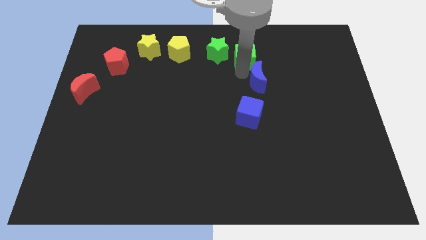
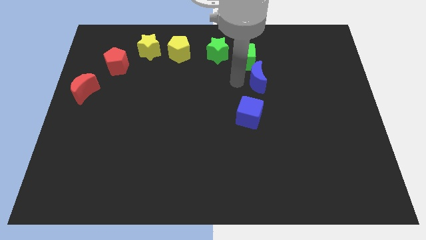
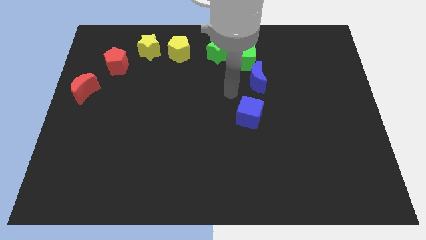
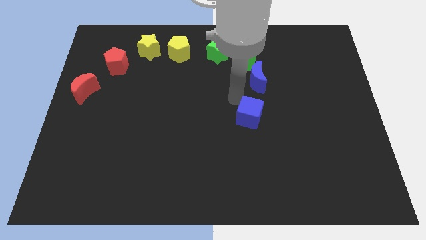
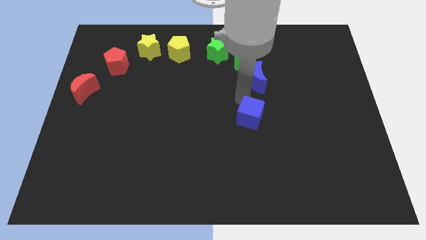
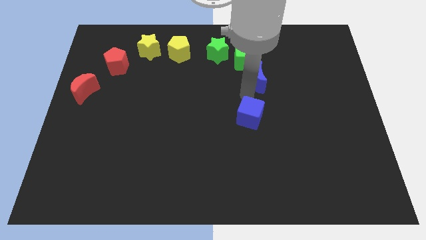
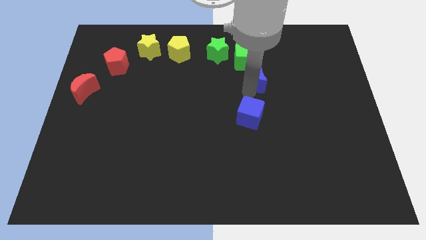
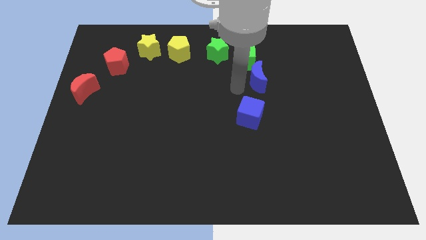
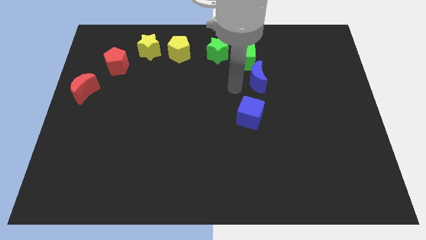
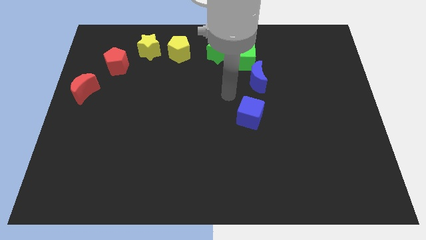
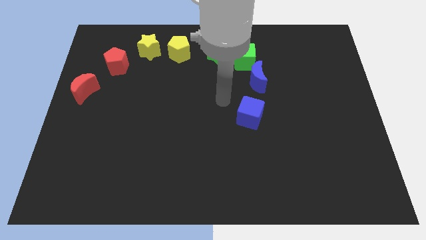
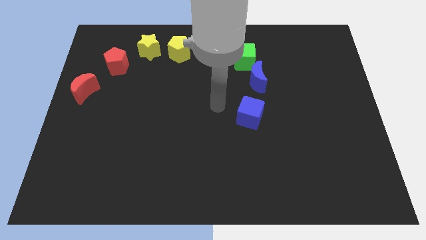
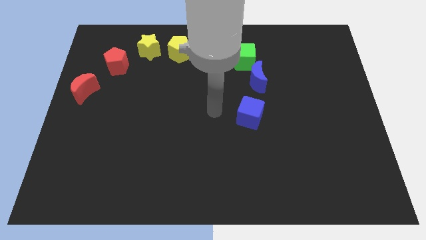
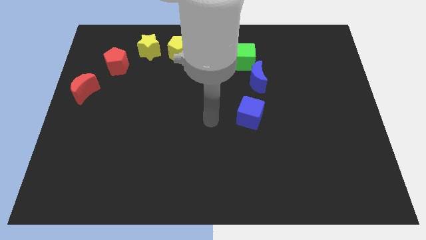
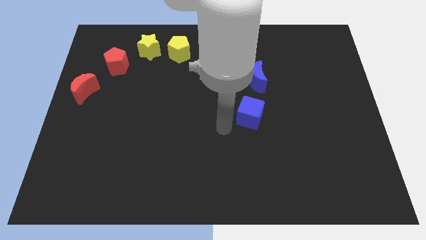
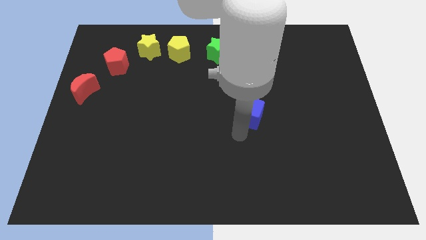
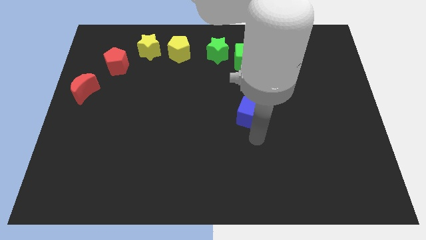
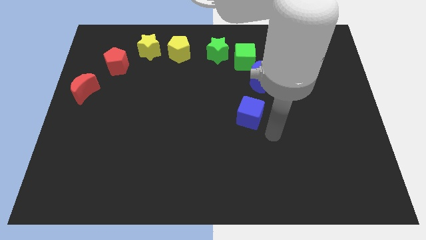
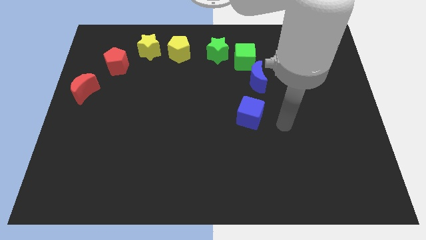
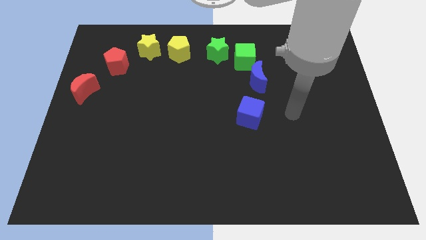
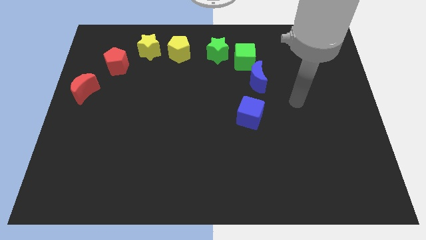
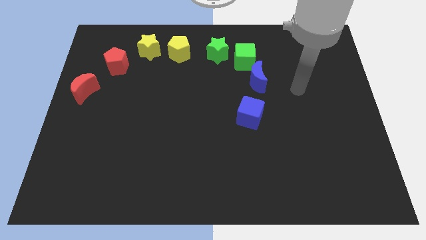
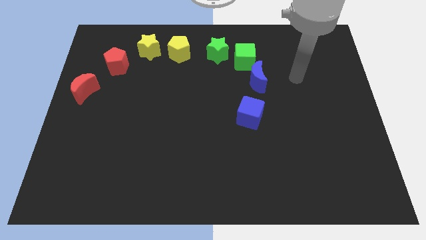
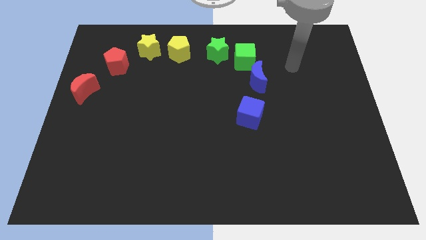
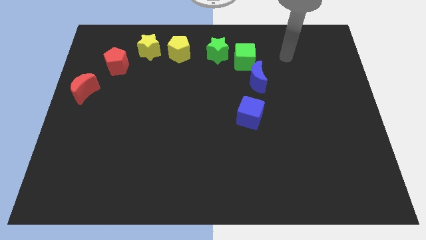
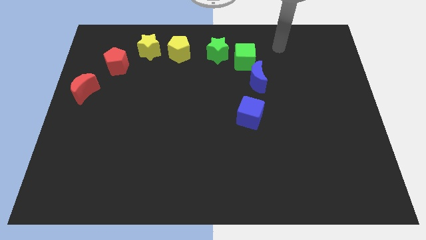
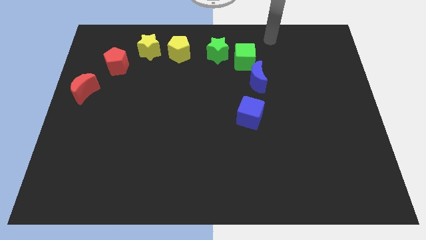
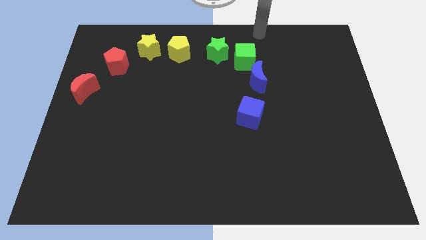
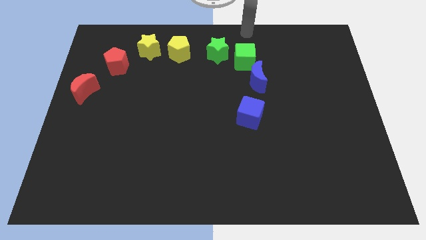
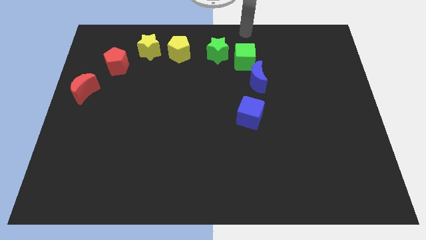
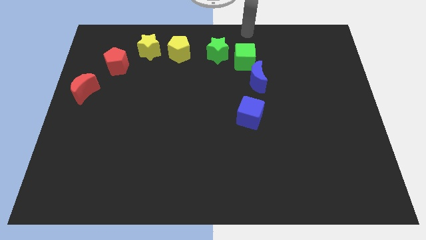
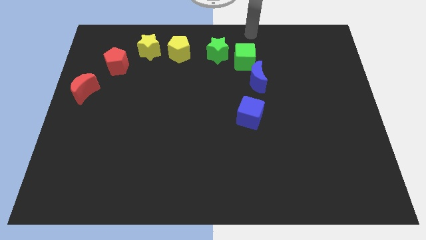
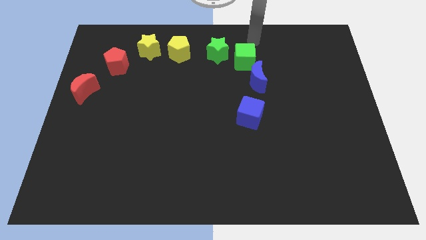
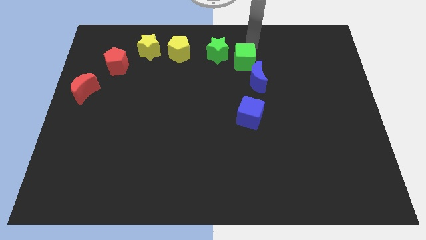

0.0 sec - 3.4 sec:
place your arm on the top side of the green cube

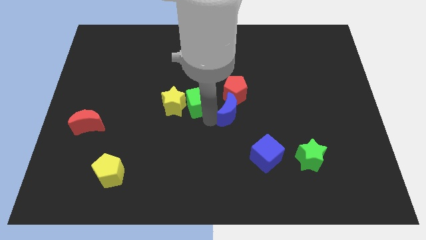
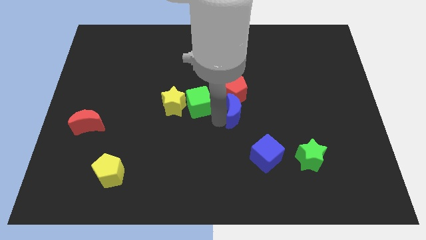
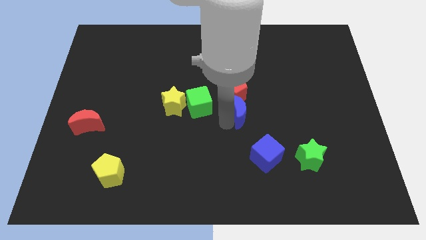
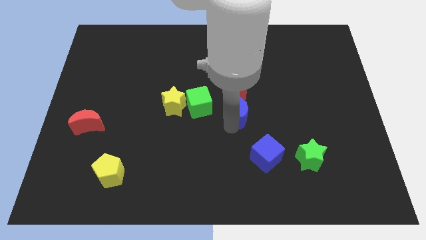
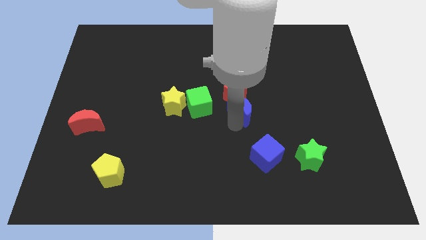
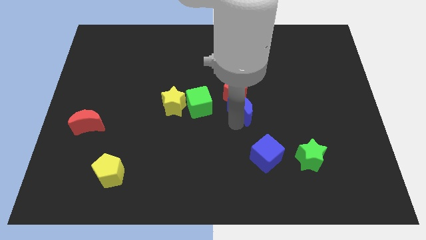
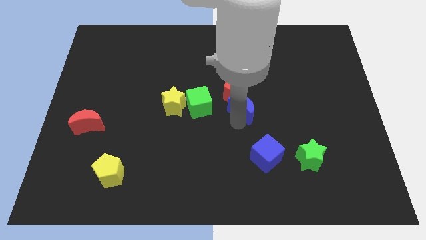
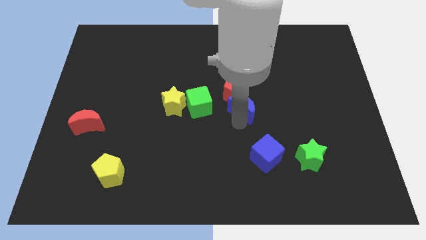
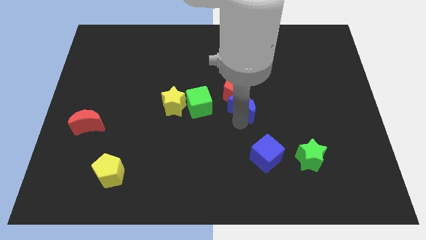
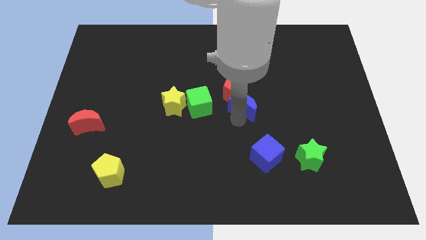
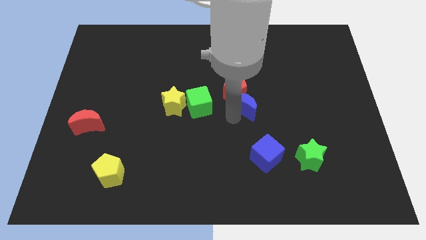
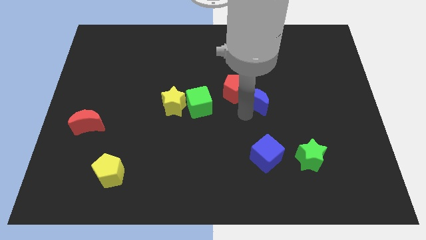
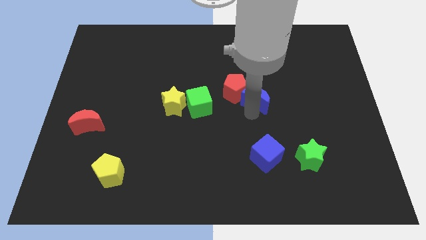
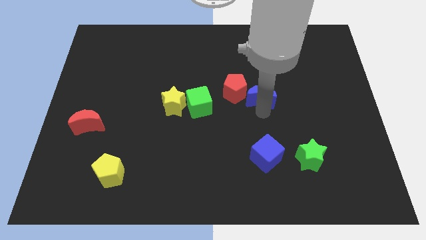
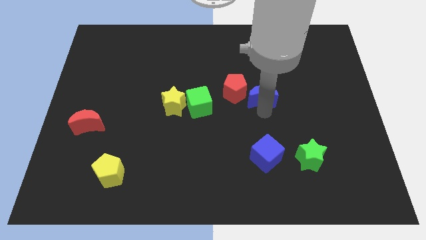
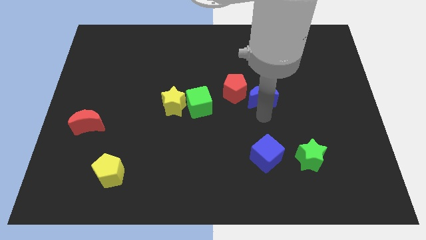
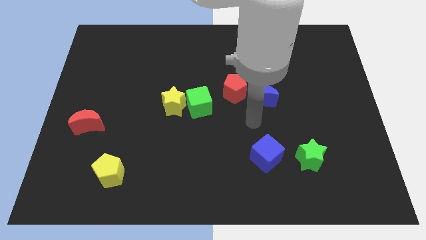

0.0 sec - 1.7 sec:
move the blue moon above the blue cube

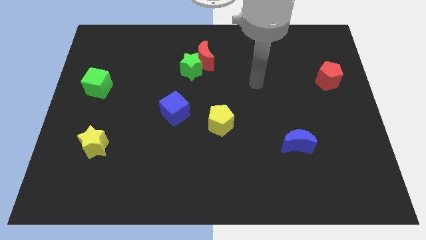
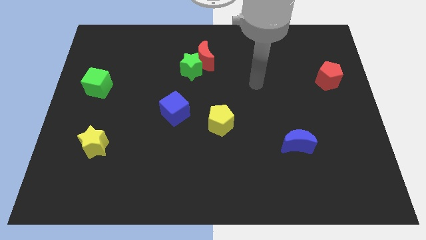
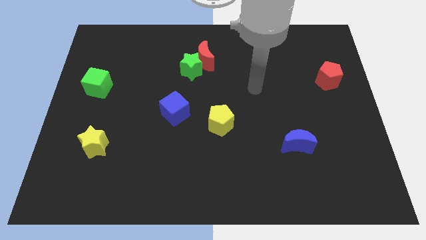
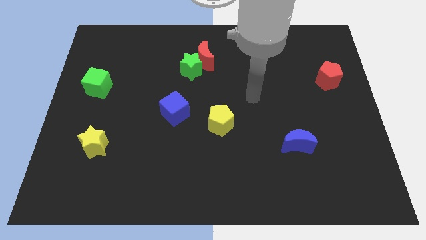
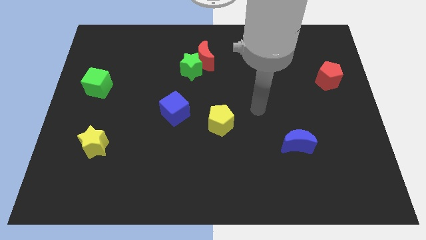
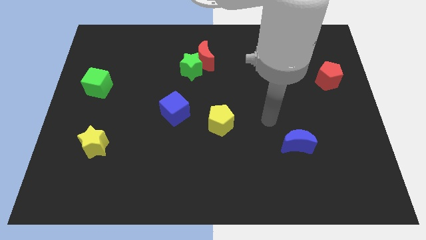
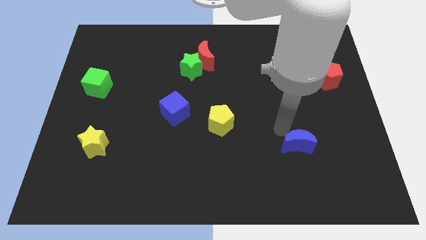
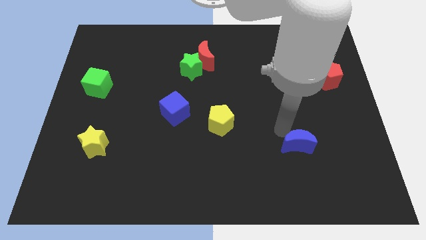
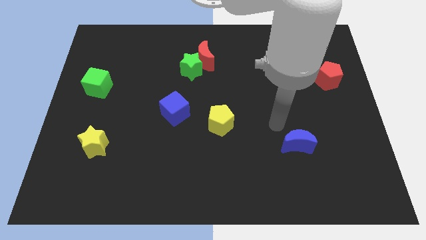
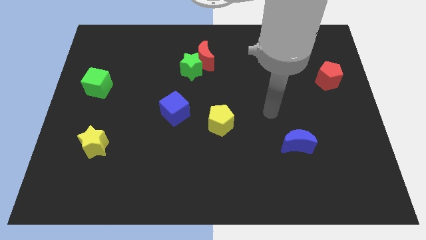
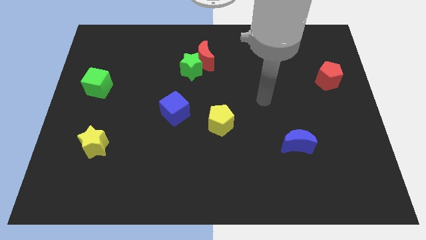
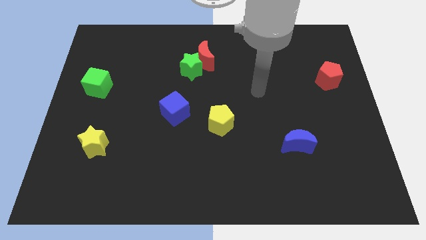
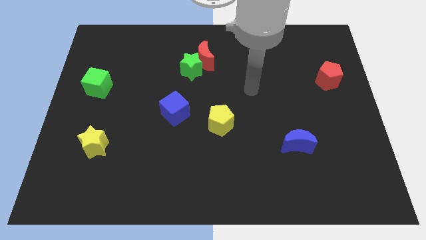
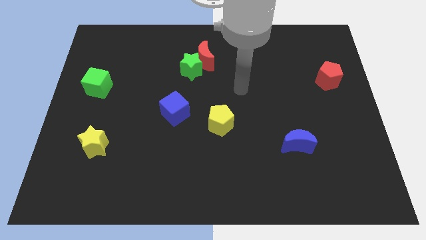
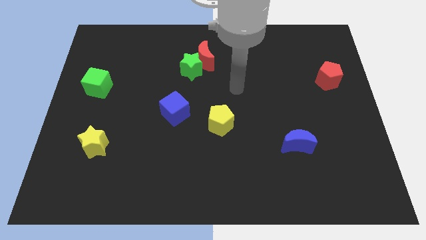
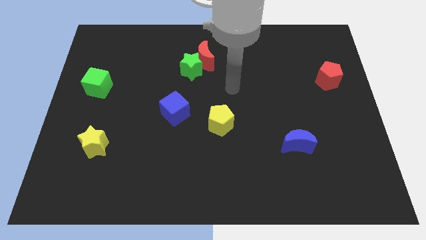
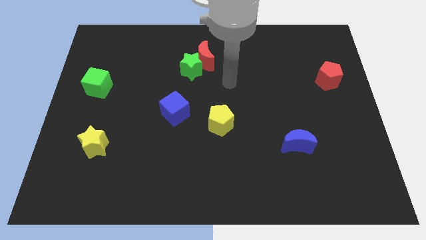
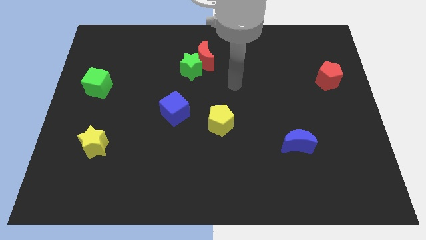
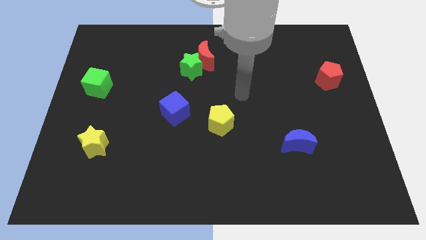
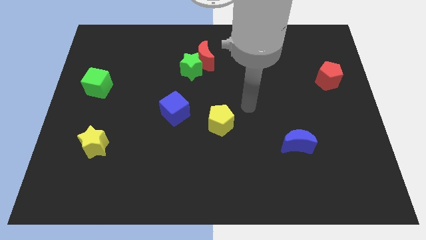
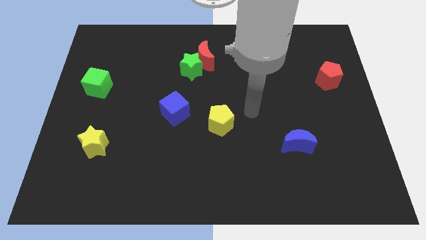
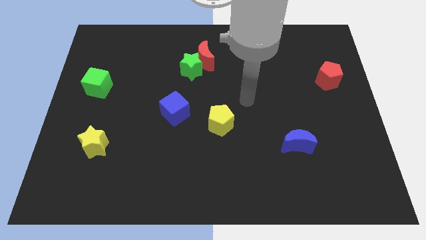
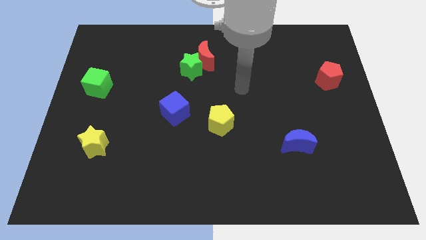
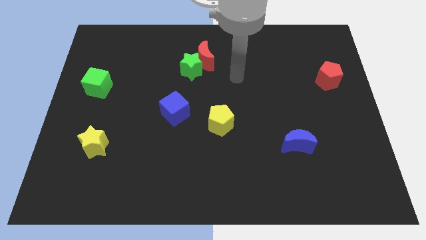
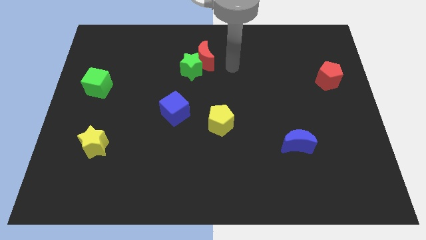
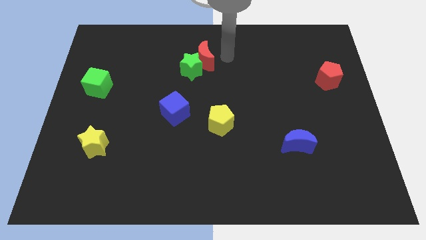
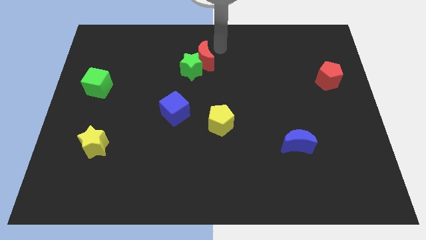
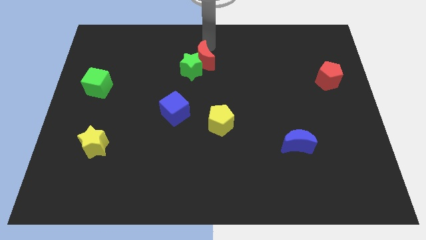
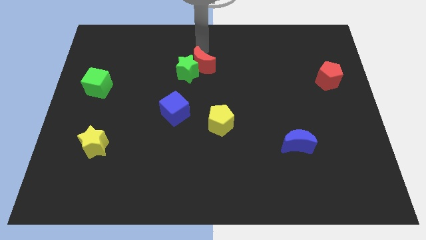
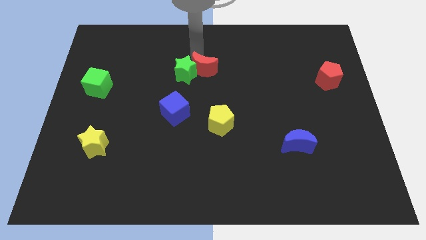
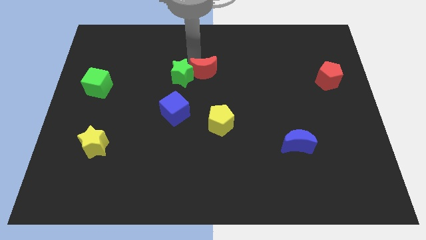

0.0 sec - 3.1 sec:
move your arm towards the red moon

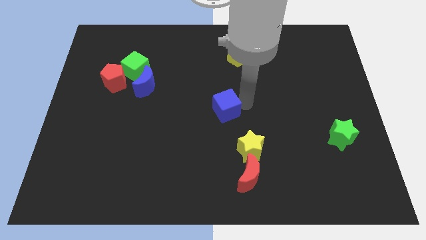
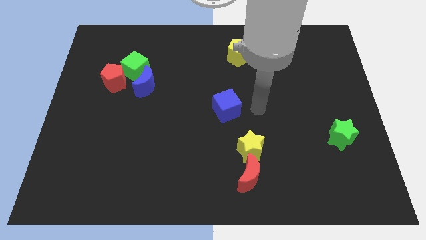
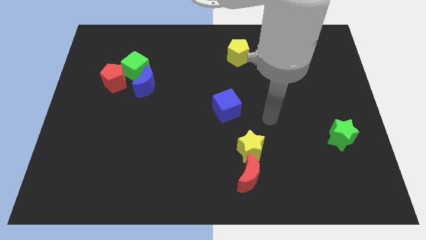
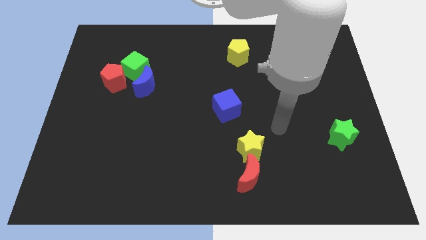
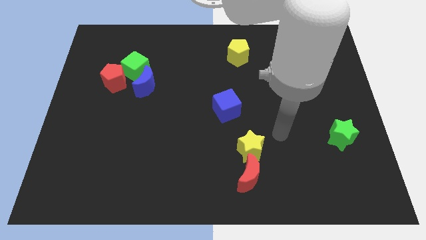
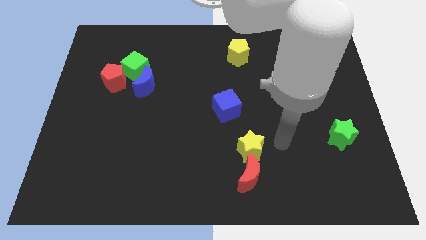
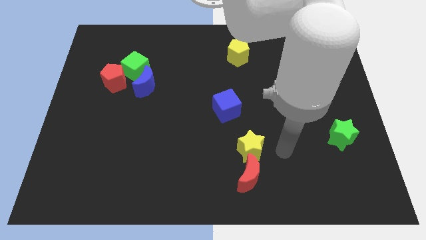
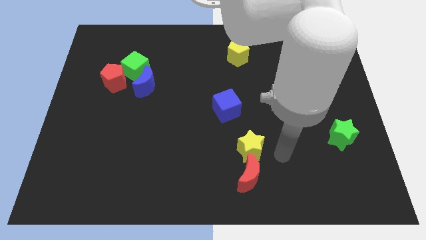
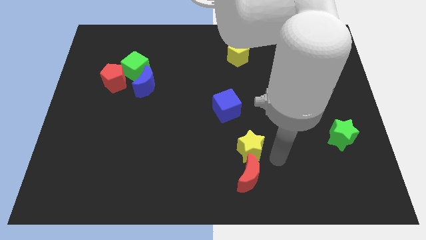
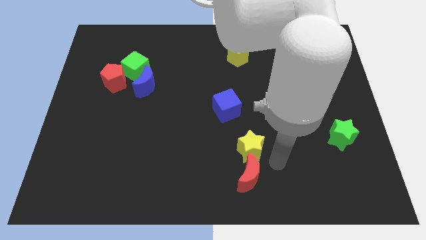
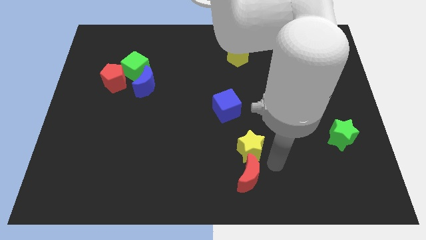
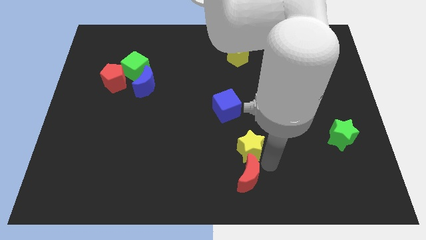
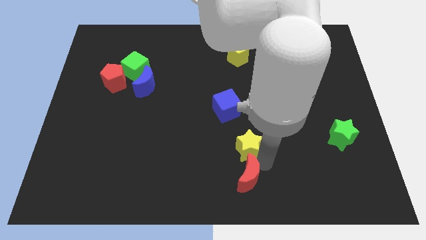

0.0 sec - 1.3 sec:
move your arm away from the blue cube
